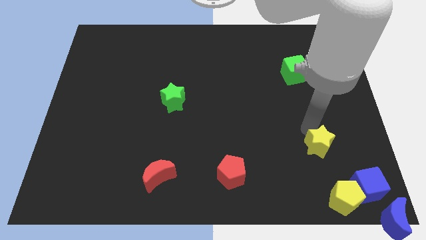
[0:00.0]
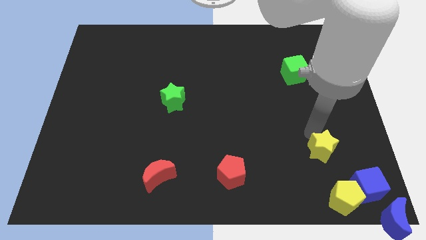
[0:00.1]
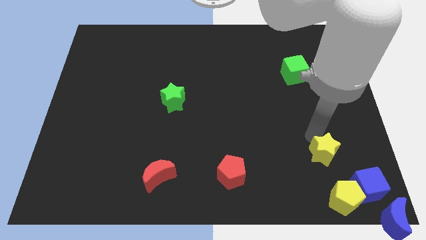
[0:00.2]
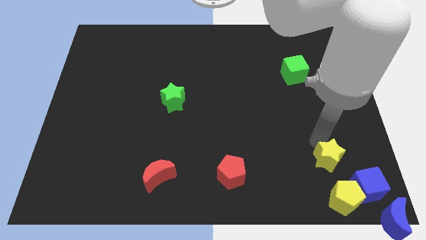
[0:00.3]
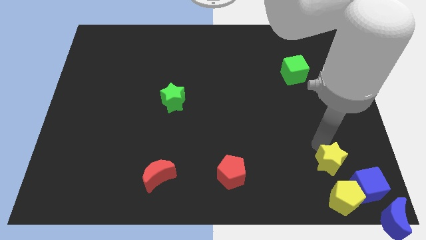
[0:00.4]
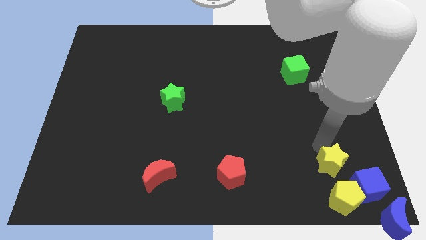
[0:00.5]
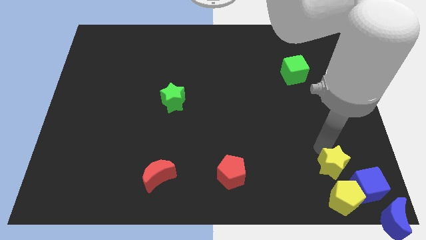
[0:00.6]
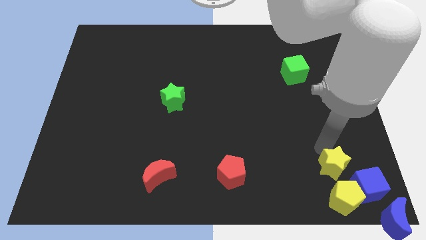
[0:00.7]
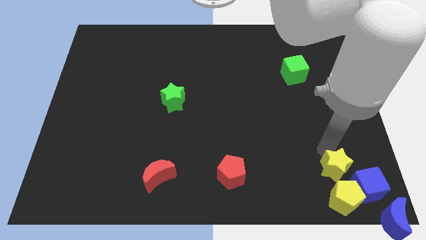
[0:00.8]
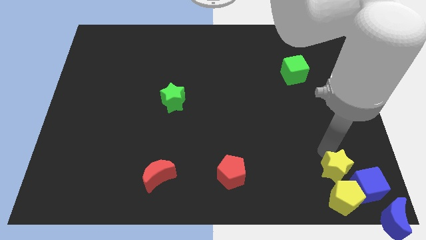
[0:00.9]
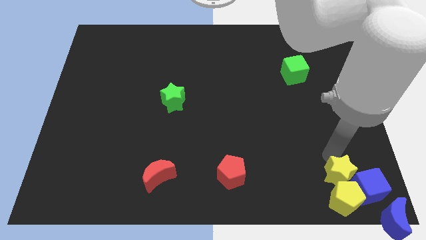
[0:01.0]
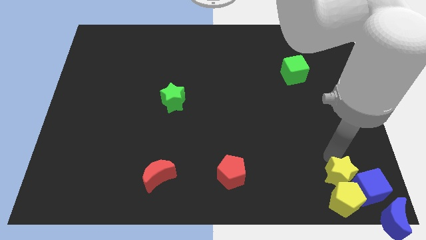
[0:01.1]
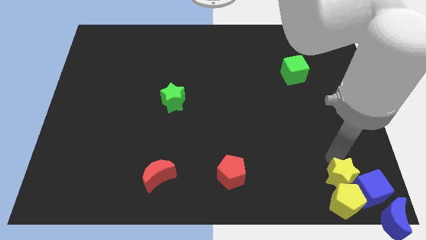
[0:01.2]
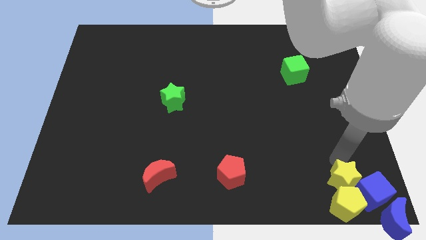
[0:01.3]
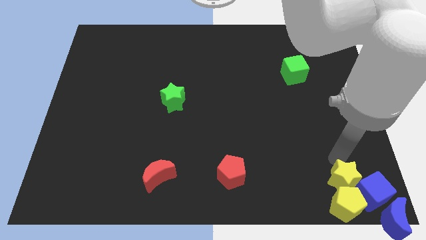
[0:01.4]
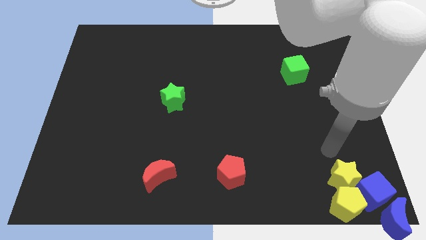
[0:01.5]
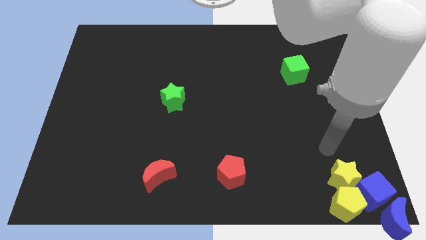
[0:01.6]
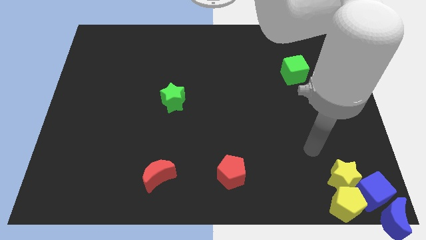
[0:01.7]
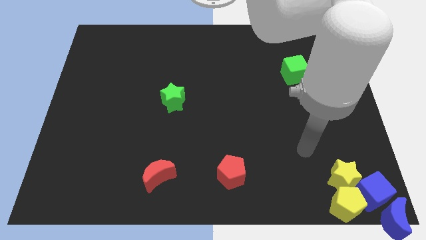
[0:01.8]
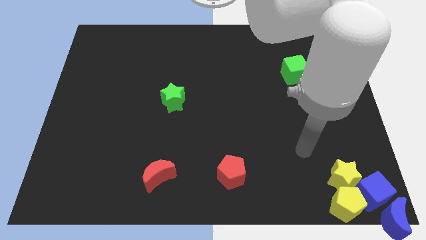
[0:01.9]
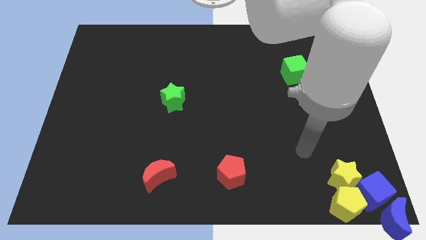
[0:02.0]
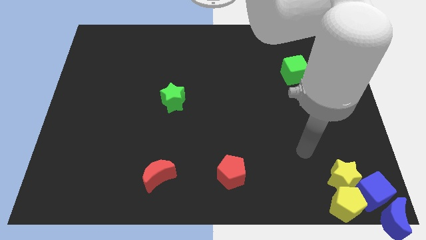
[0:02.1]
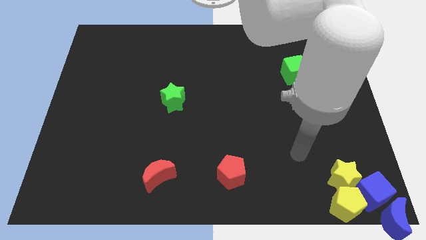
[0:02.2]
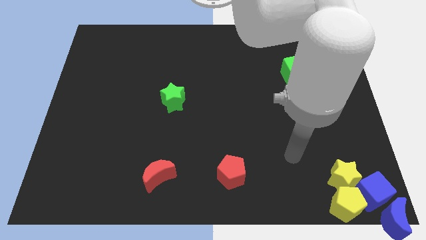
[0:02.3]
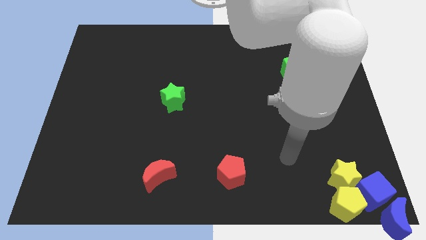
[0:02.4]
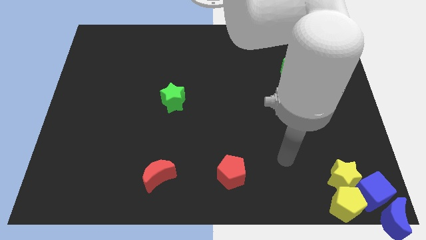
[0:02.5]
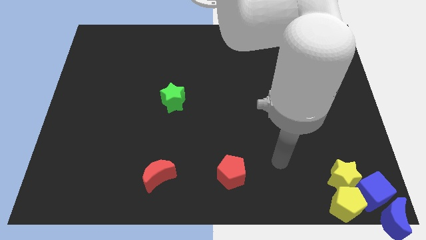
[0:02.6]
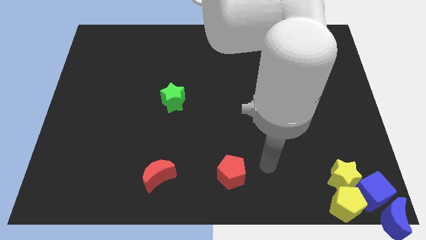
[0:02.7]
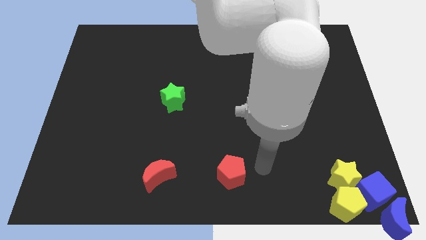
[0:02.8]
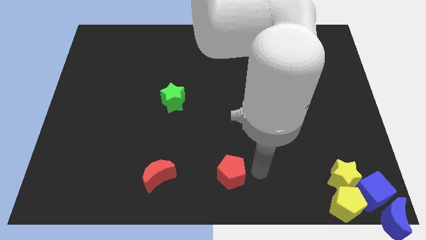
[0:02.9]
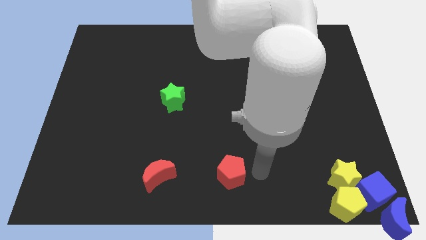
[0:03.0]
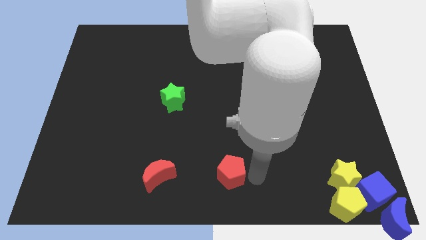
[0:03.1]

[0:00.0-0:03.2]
push the yellow star into the group of object

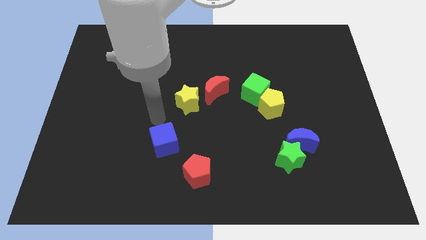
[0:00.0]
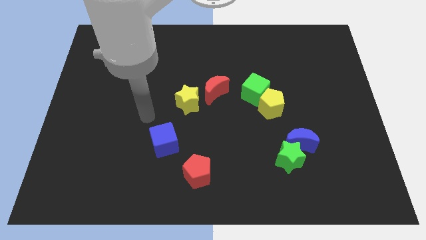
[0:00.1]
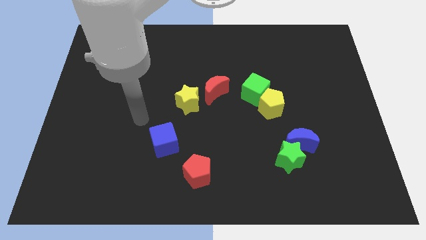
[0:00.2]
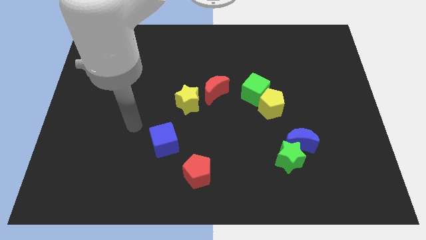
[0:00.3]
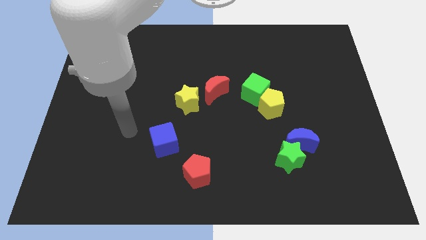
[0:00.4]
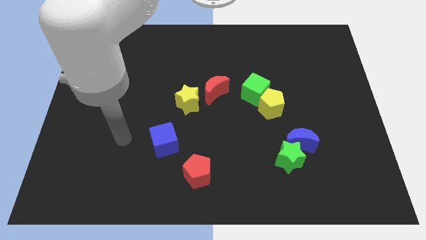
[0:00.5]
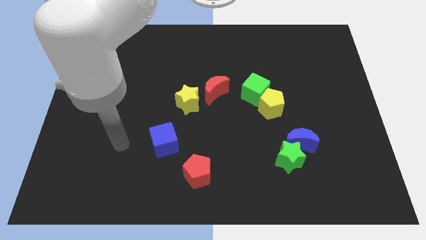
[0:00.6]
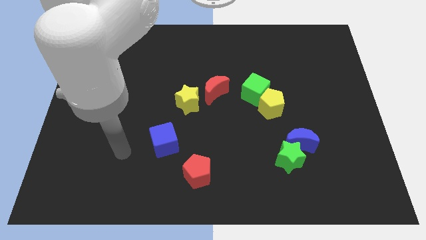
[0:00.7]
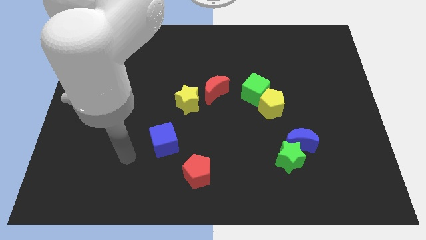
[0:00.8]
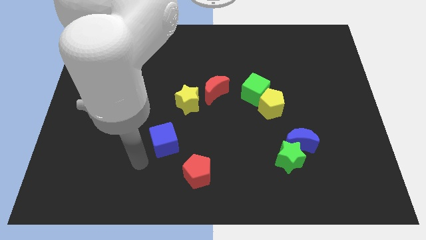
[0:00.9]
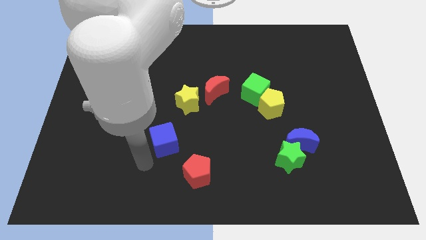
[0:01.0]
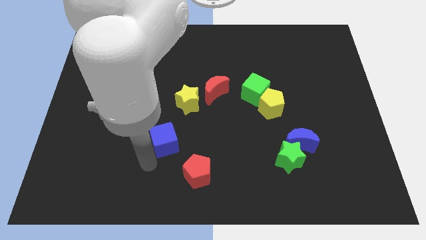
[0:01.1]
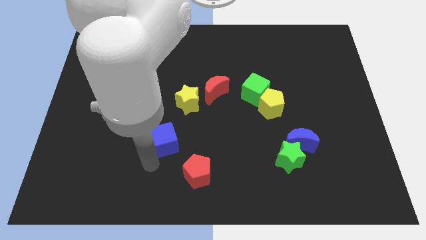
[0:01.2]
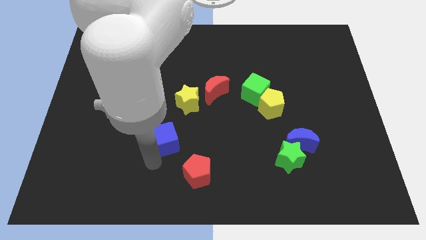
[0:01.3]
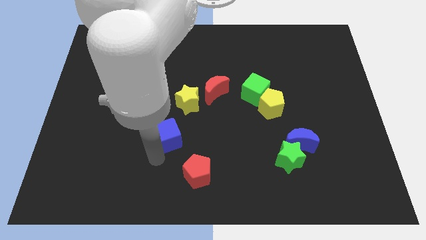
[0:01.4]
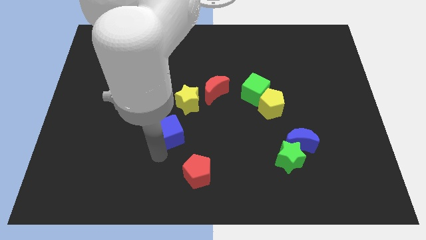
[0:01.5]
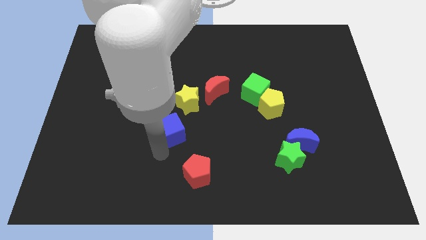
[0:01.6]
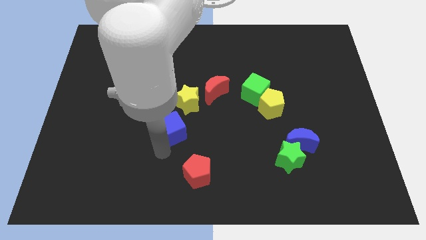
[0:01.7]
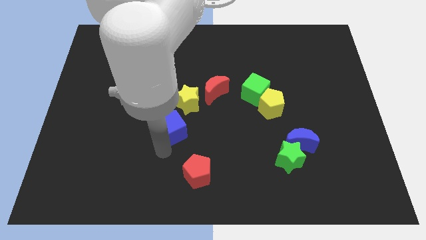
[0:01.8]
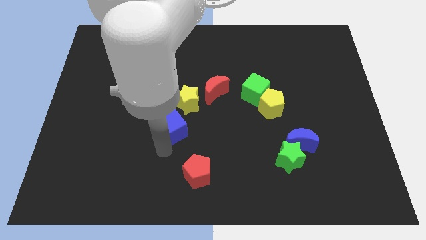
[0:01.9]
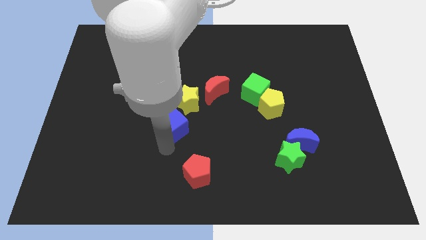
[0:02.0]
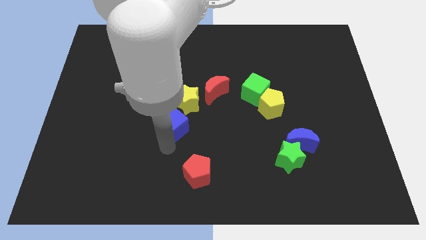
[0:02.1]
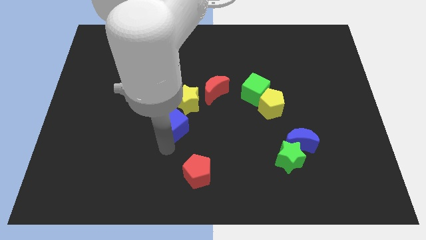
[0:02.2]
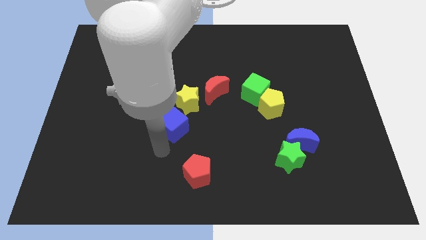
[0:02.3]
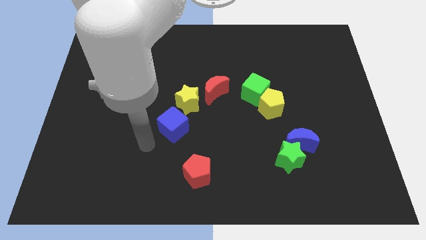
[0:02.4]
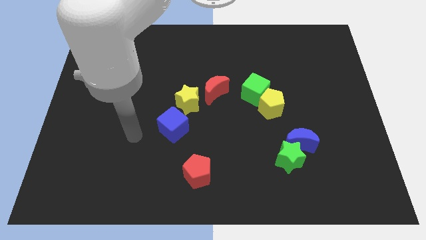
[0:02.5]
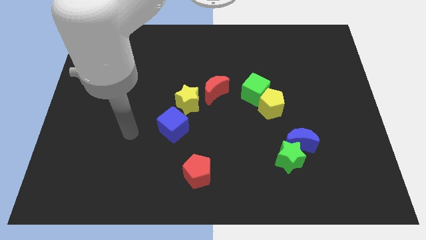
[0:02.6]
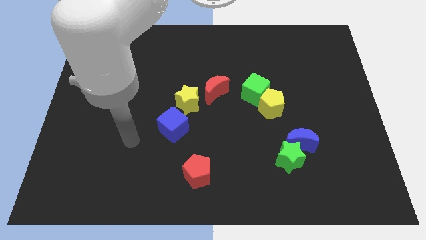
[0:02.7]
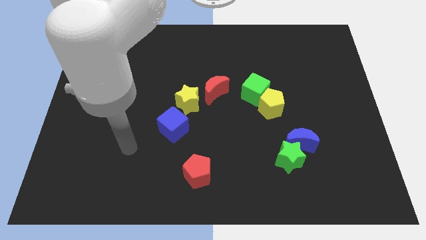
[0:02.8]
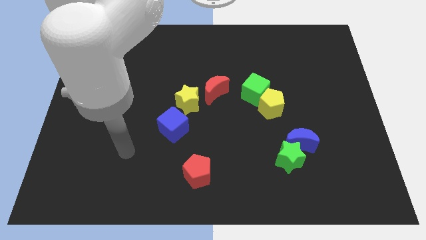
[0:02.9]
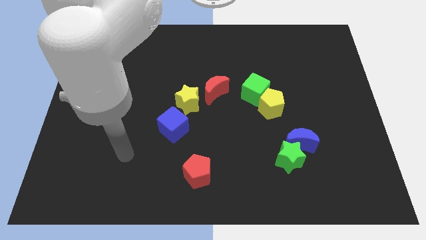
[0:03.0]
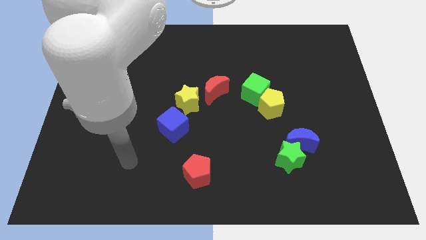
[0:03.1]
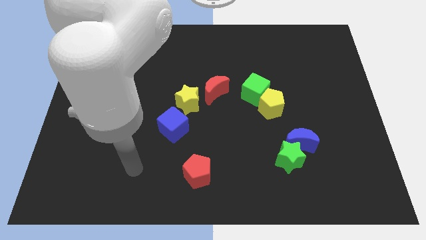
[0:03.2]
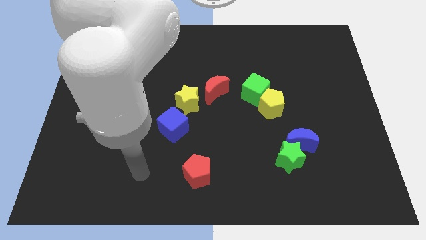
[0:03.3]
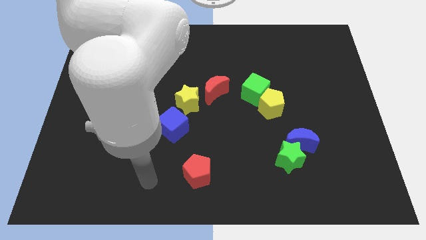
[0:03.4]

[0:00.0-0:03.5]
move blue cube close to the yellow star

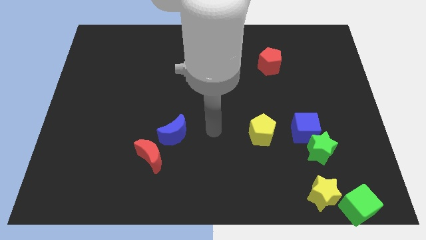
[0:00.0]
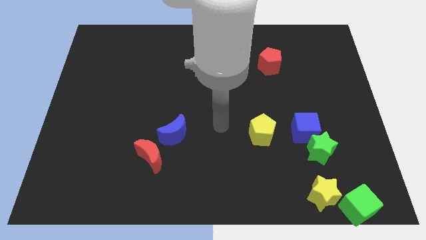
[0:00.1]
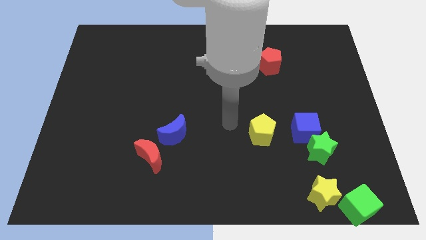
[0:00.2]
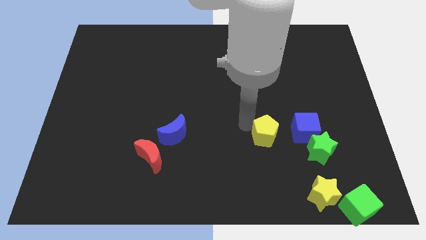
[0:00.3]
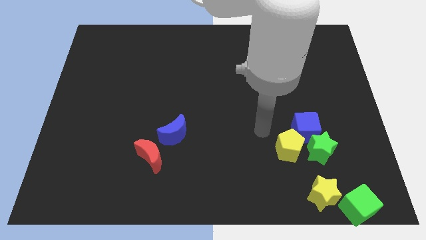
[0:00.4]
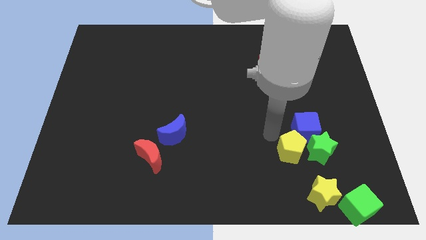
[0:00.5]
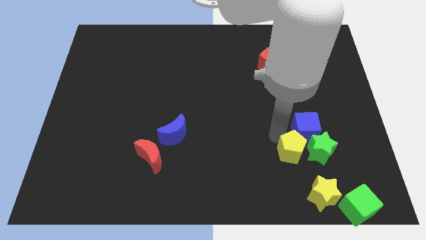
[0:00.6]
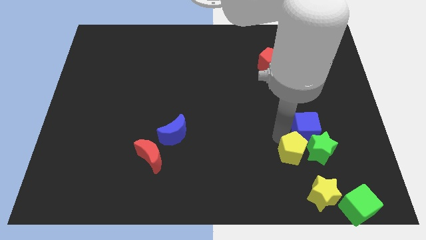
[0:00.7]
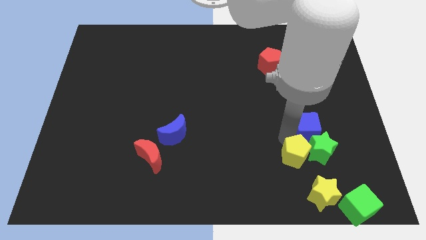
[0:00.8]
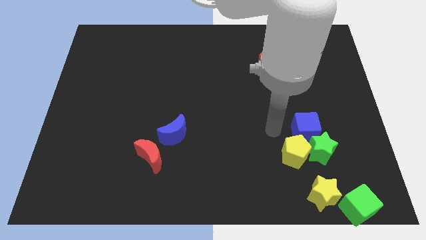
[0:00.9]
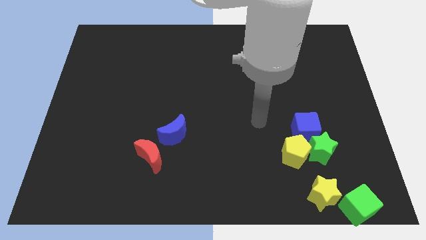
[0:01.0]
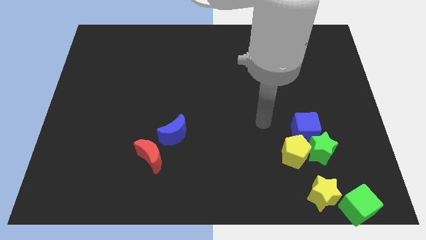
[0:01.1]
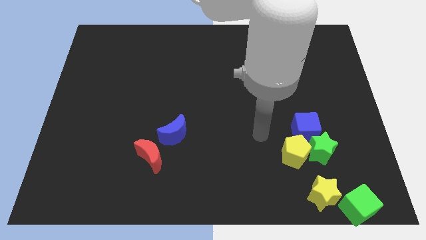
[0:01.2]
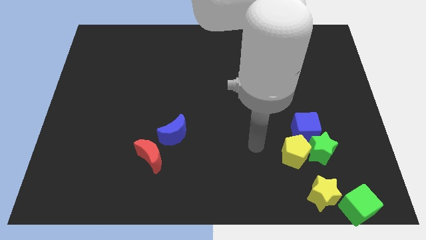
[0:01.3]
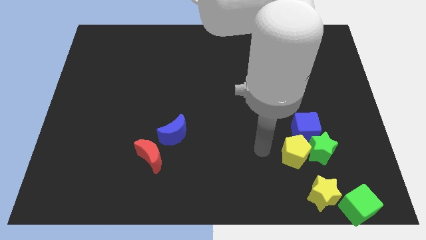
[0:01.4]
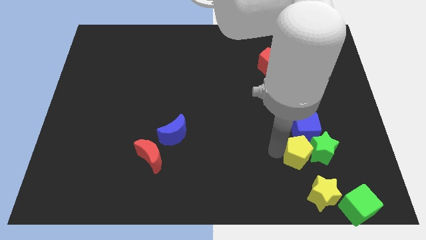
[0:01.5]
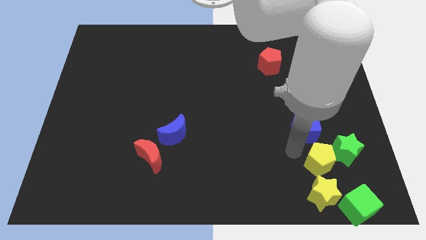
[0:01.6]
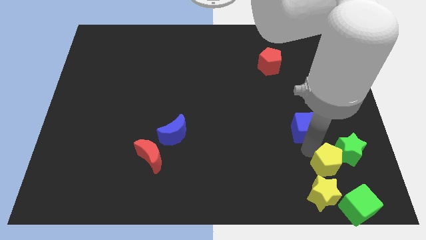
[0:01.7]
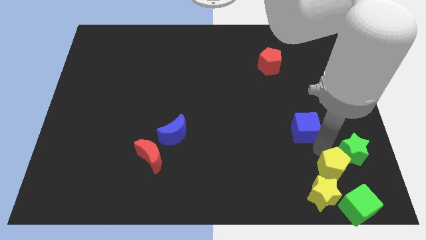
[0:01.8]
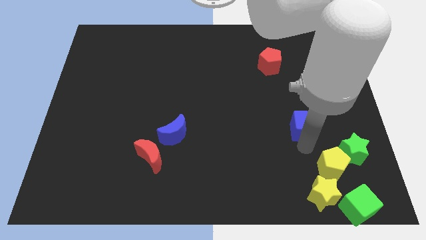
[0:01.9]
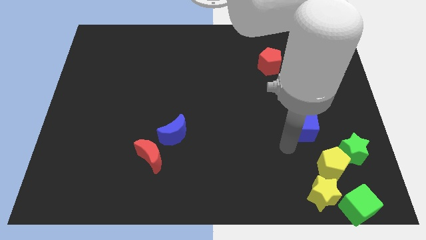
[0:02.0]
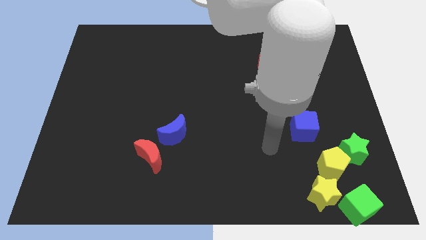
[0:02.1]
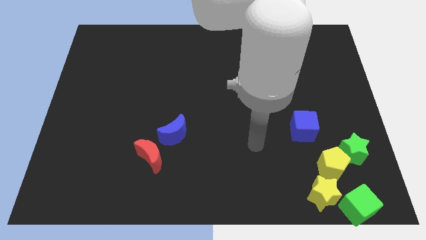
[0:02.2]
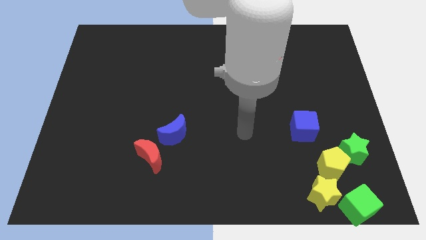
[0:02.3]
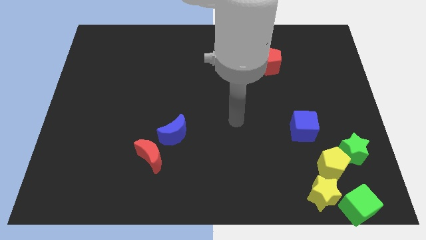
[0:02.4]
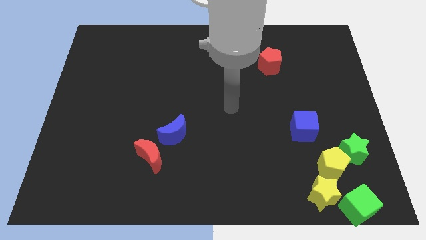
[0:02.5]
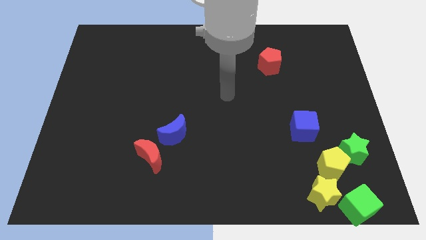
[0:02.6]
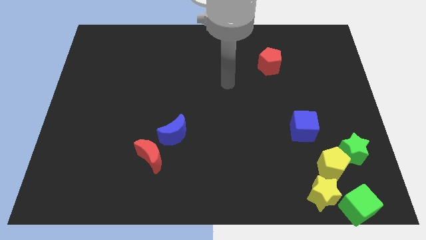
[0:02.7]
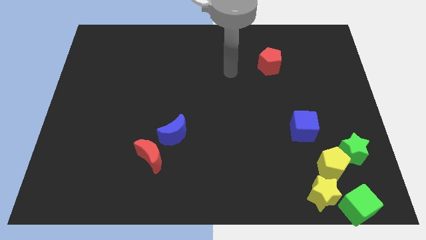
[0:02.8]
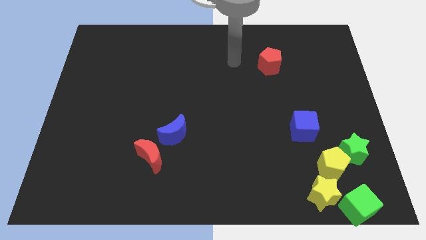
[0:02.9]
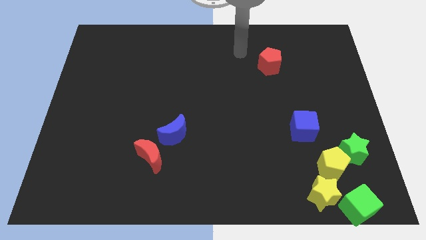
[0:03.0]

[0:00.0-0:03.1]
move the yellow pentagon at the top right of the yellow star
